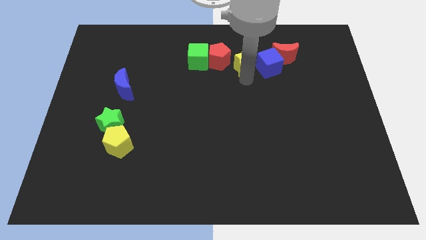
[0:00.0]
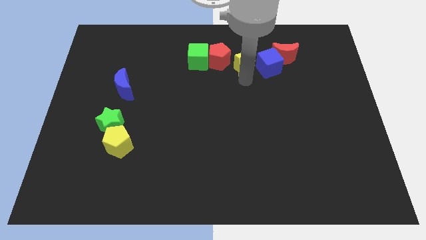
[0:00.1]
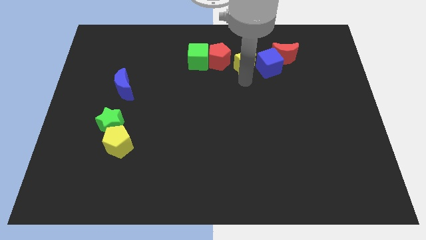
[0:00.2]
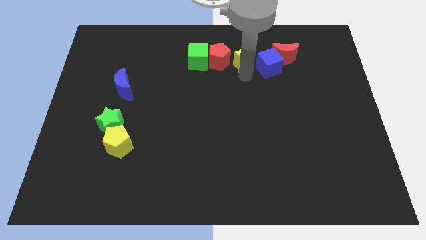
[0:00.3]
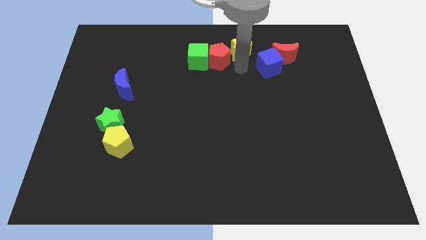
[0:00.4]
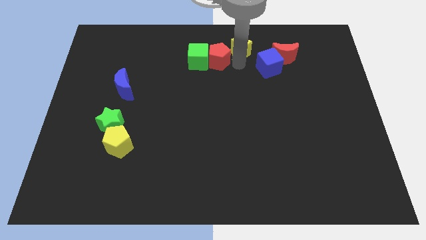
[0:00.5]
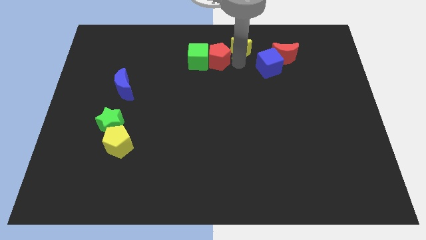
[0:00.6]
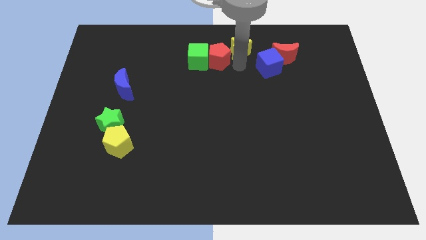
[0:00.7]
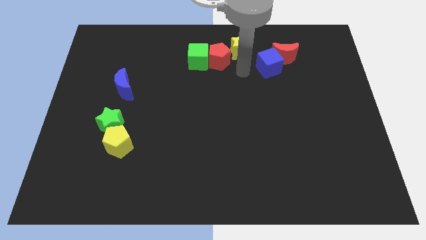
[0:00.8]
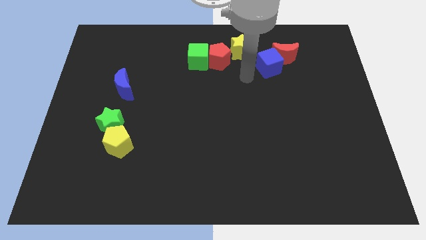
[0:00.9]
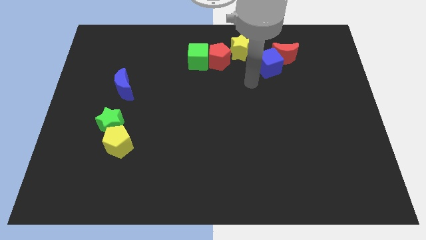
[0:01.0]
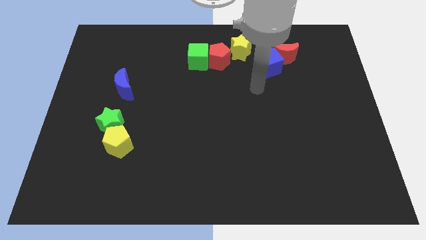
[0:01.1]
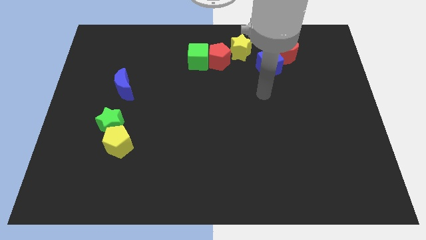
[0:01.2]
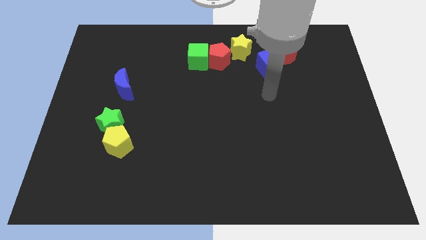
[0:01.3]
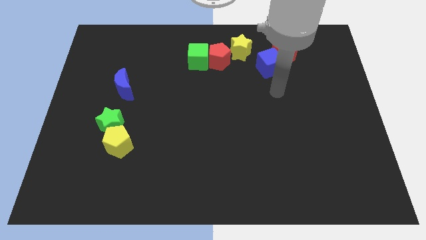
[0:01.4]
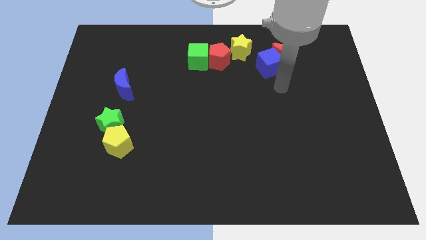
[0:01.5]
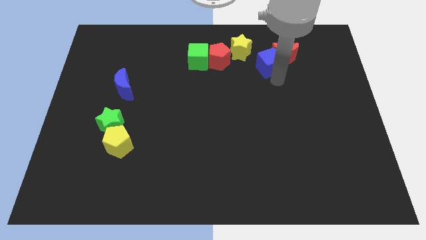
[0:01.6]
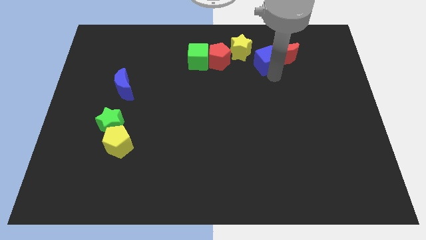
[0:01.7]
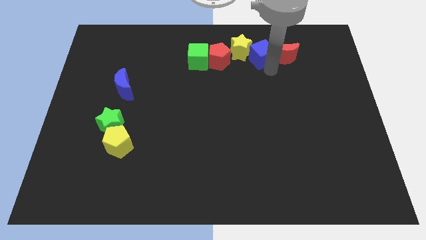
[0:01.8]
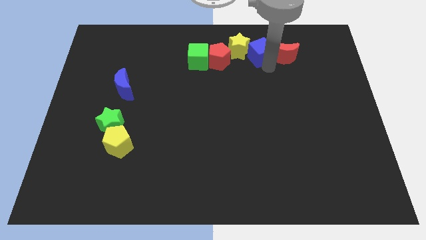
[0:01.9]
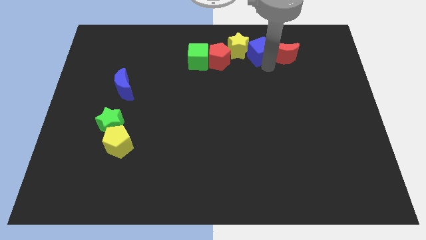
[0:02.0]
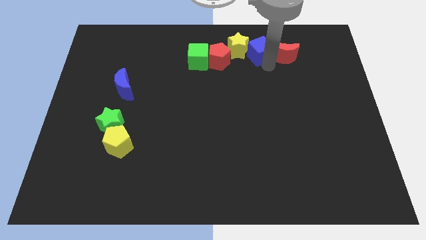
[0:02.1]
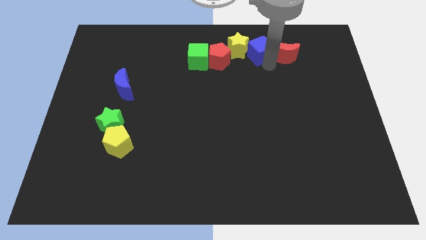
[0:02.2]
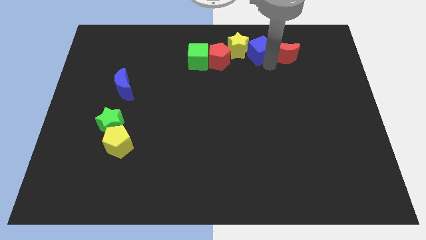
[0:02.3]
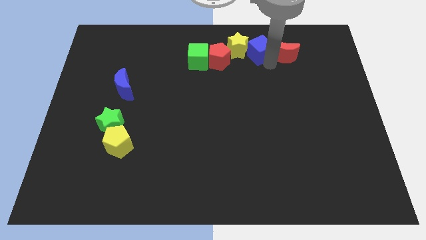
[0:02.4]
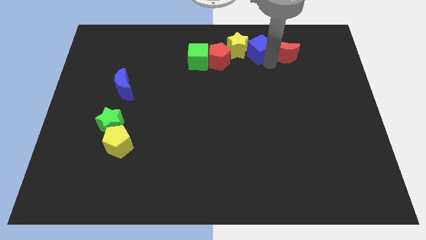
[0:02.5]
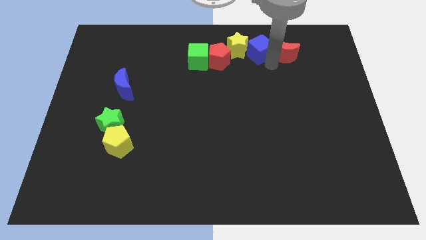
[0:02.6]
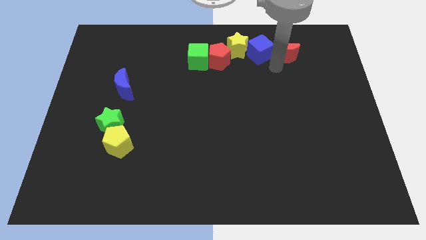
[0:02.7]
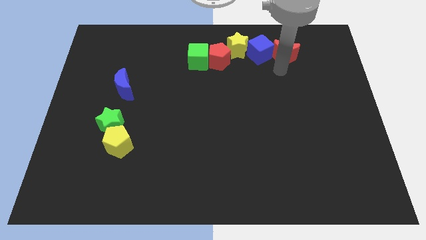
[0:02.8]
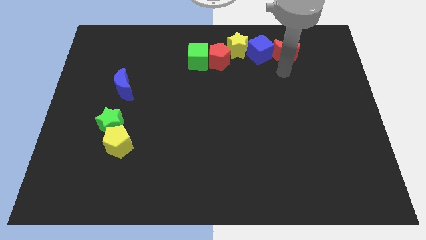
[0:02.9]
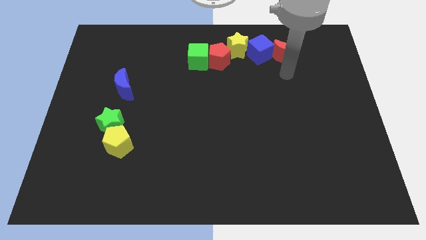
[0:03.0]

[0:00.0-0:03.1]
slide the blue cube and yellow star to the left side of the red moon

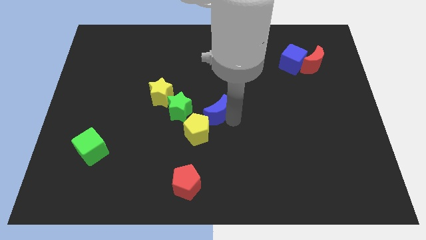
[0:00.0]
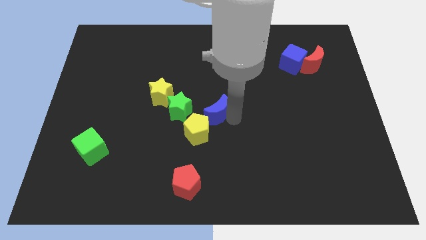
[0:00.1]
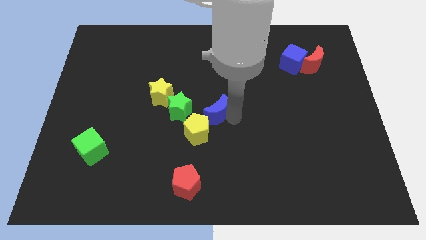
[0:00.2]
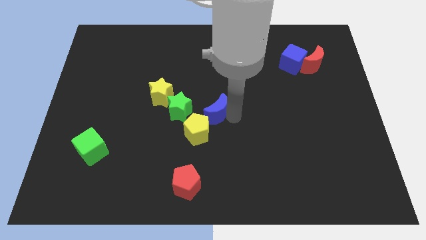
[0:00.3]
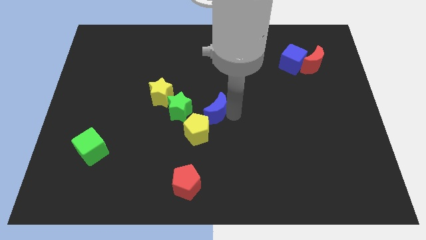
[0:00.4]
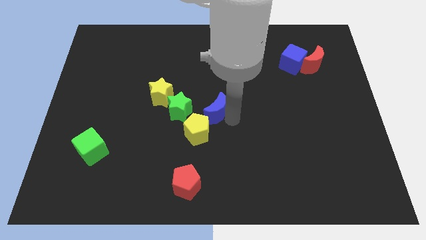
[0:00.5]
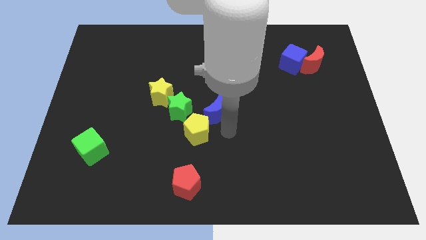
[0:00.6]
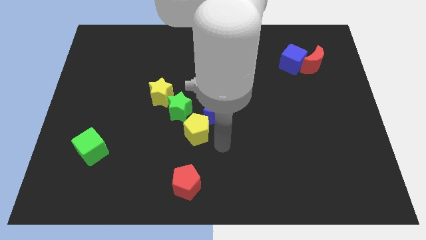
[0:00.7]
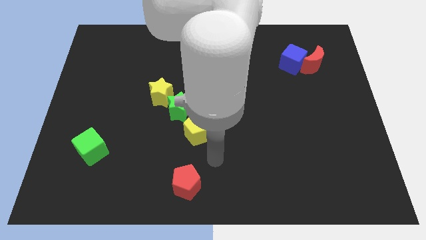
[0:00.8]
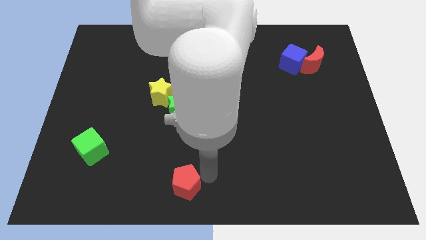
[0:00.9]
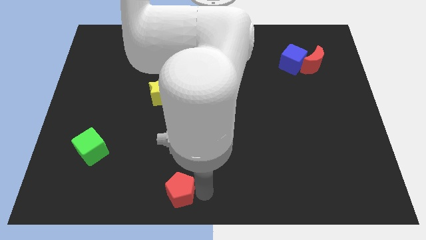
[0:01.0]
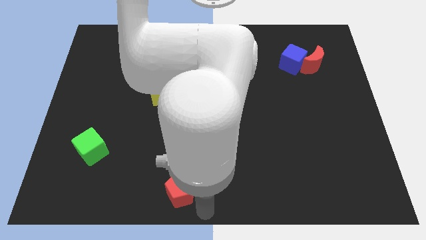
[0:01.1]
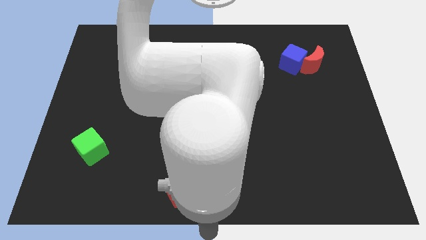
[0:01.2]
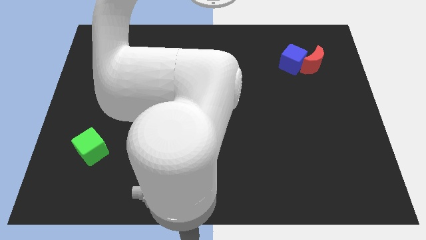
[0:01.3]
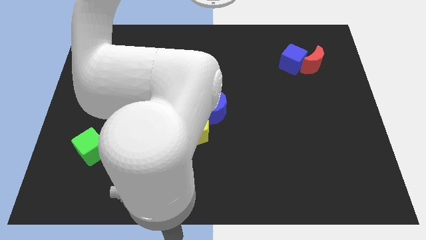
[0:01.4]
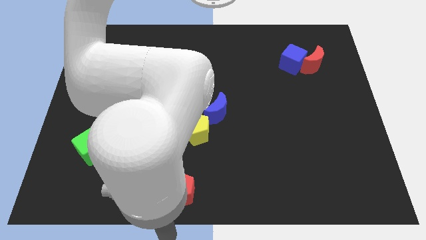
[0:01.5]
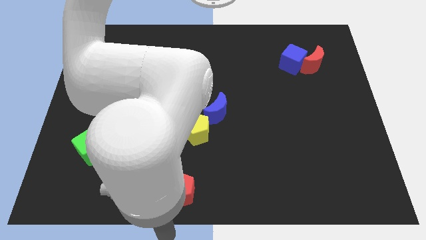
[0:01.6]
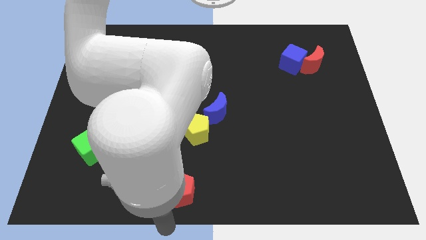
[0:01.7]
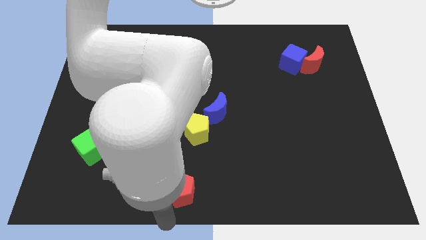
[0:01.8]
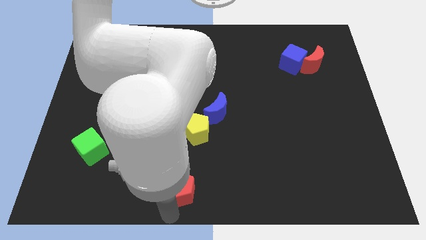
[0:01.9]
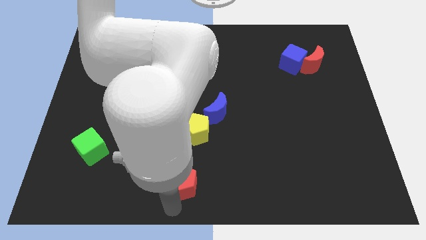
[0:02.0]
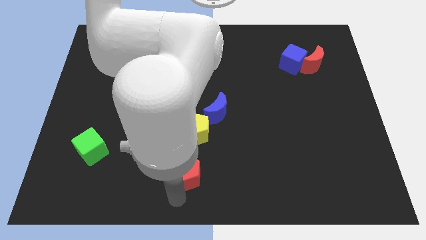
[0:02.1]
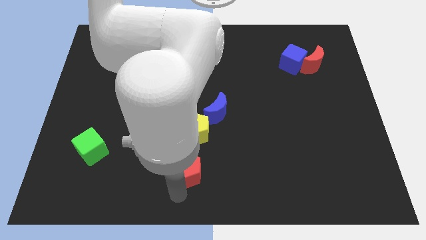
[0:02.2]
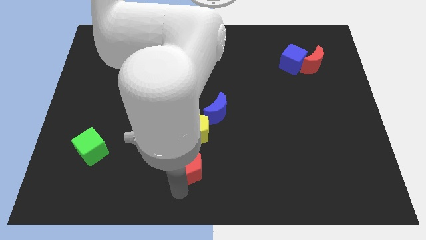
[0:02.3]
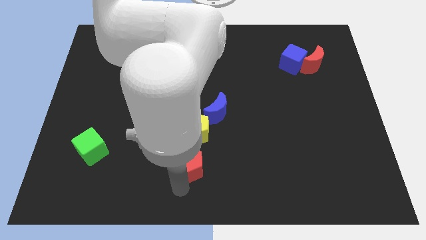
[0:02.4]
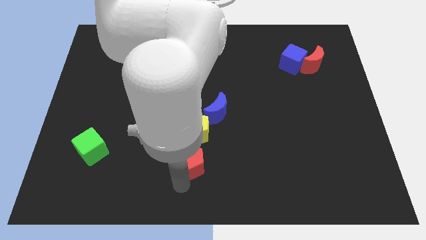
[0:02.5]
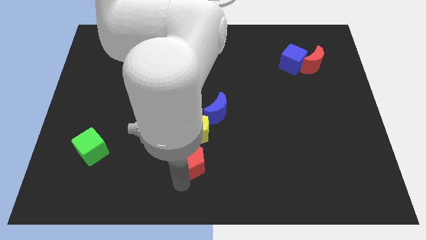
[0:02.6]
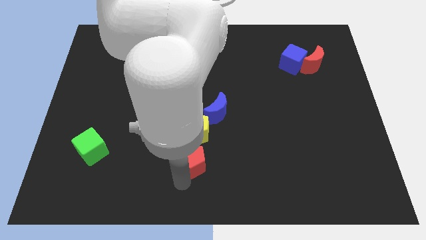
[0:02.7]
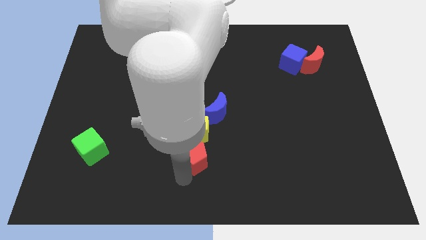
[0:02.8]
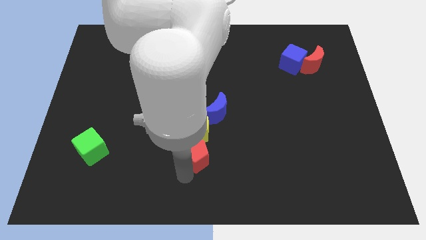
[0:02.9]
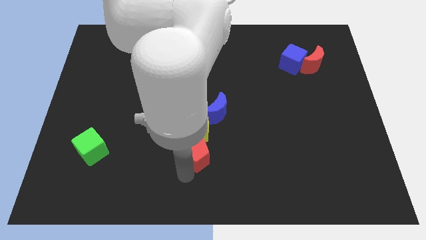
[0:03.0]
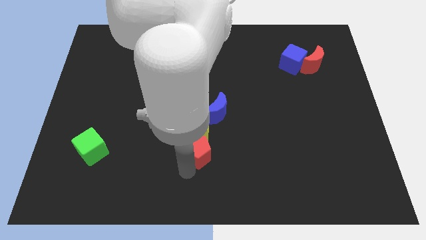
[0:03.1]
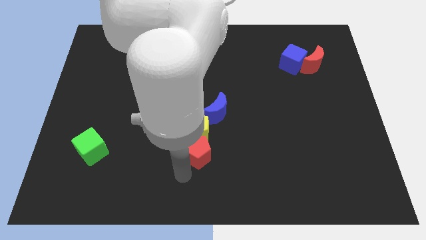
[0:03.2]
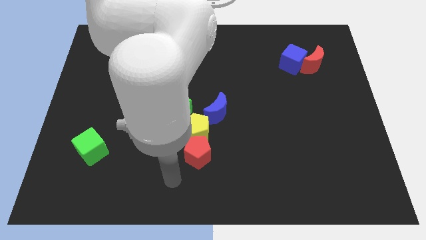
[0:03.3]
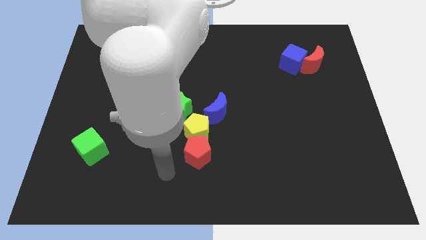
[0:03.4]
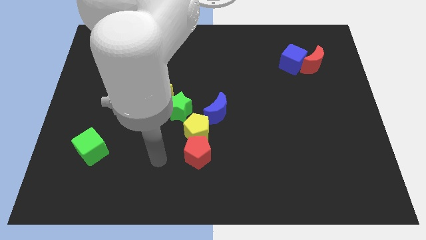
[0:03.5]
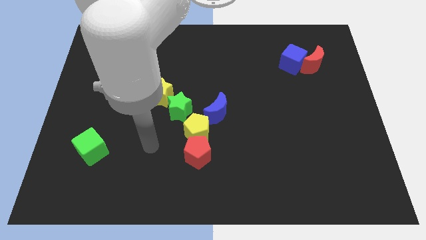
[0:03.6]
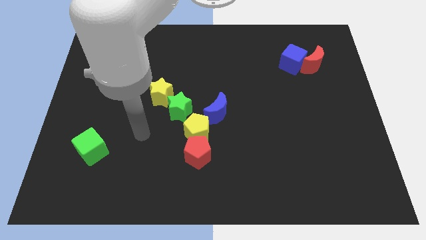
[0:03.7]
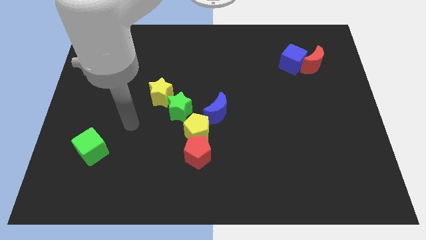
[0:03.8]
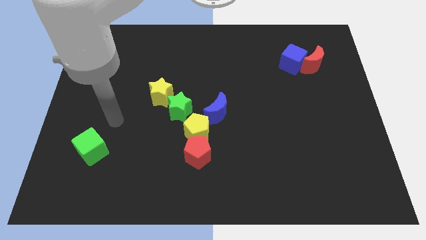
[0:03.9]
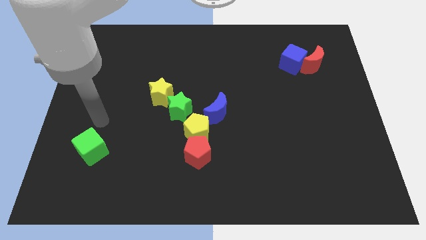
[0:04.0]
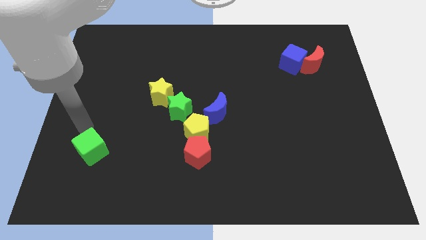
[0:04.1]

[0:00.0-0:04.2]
pull the red pentagon into the yellow pentagon

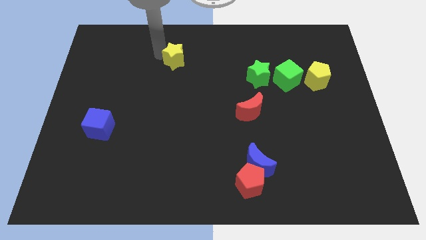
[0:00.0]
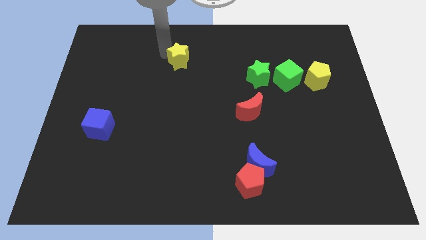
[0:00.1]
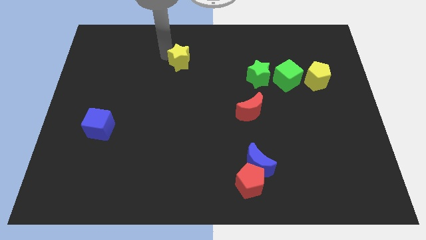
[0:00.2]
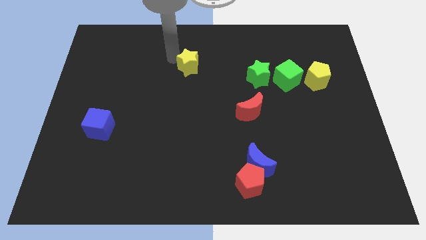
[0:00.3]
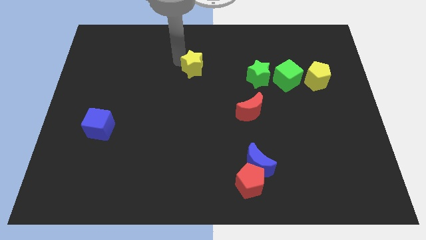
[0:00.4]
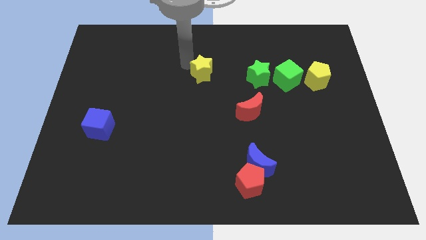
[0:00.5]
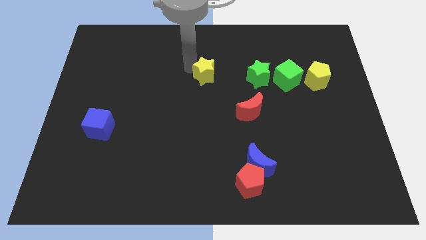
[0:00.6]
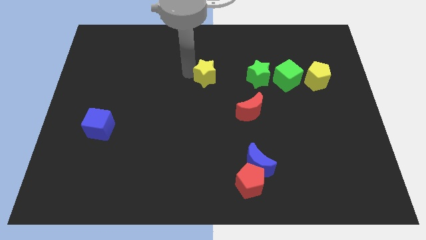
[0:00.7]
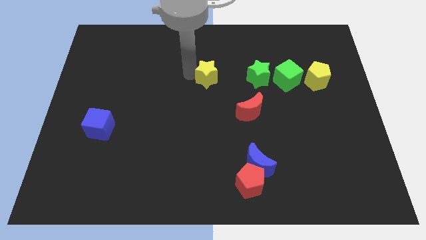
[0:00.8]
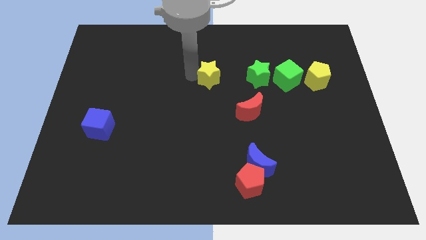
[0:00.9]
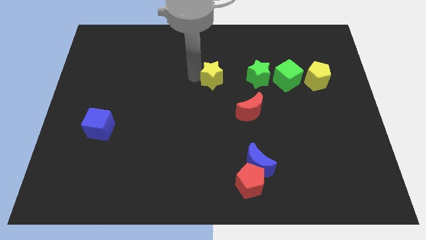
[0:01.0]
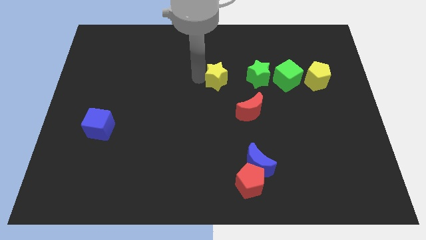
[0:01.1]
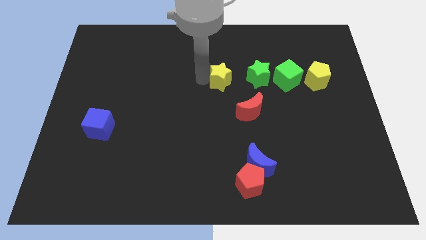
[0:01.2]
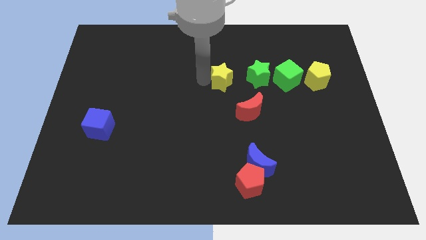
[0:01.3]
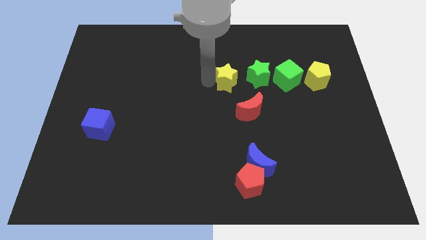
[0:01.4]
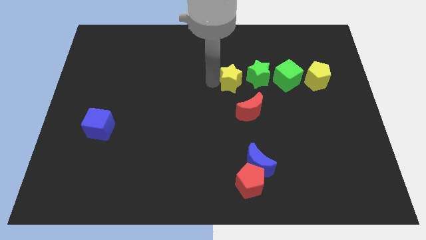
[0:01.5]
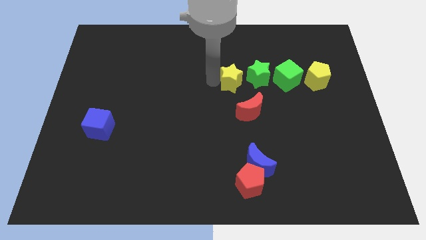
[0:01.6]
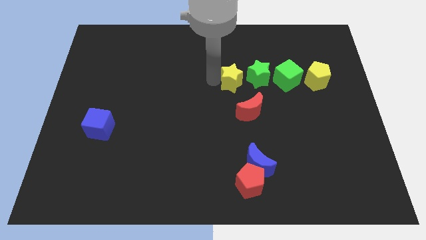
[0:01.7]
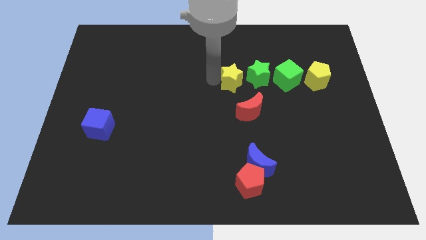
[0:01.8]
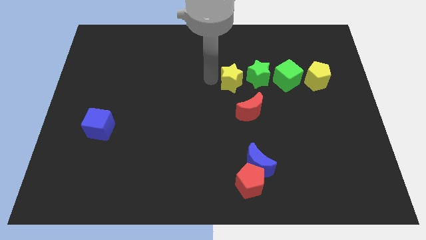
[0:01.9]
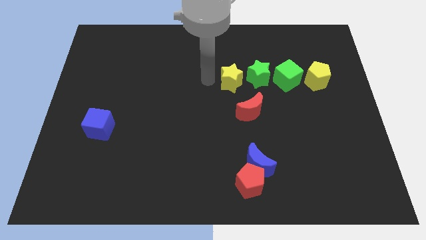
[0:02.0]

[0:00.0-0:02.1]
push yellow star into green star
